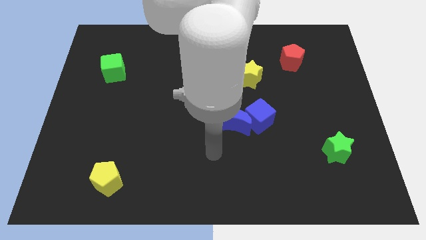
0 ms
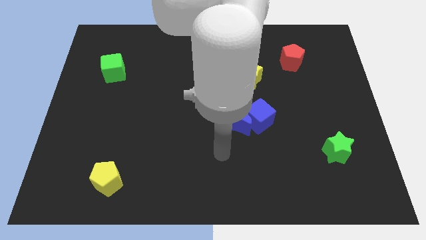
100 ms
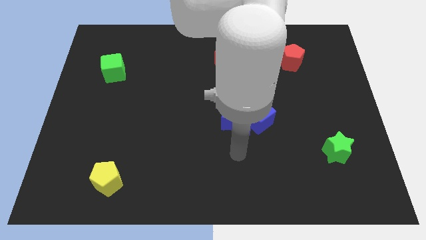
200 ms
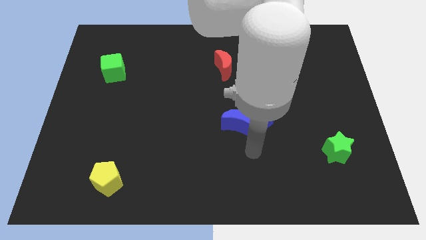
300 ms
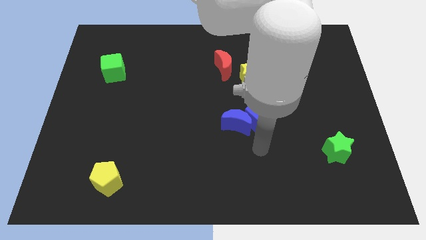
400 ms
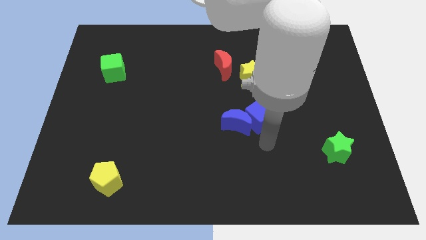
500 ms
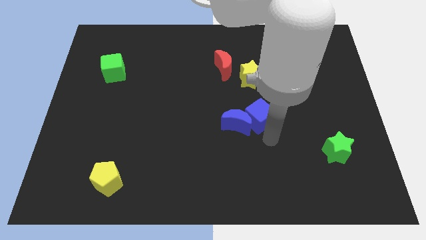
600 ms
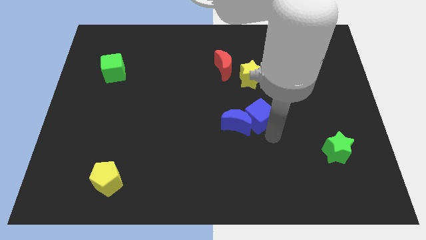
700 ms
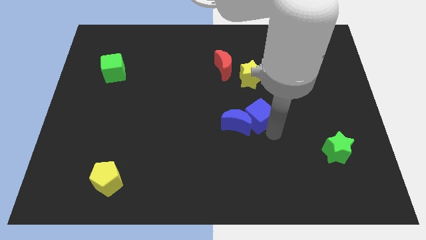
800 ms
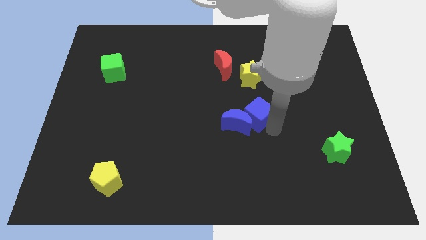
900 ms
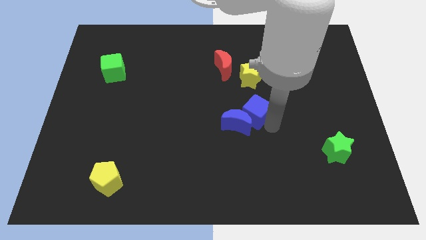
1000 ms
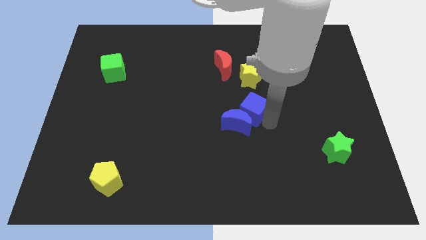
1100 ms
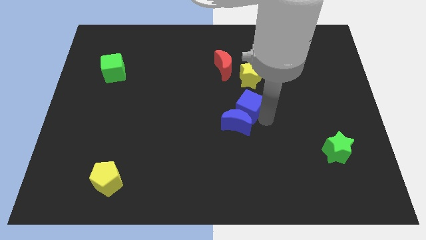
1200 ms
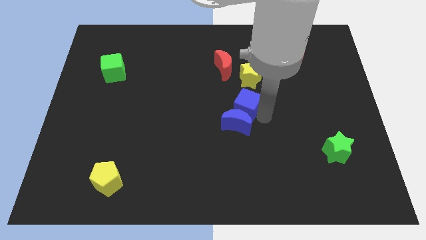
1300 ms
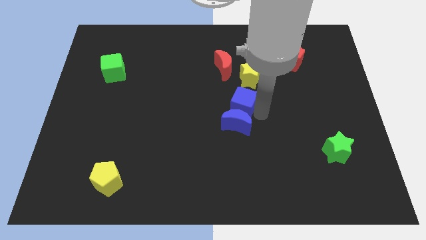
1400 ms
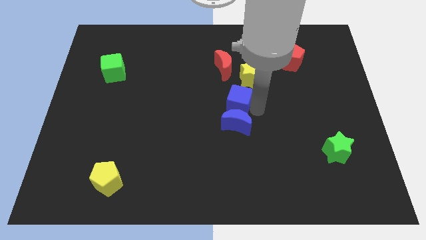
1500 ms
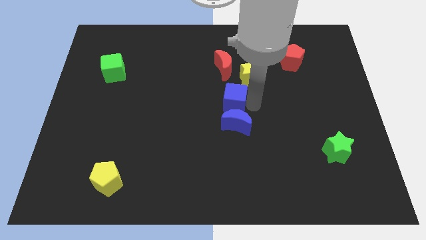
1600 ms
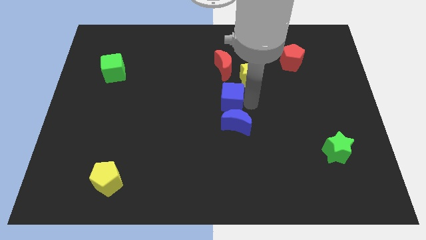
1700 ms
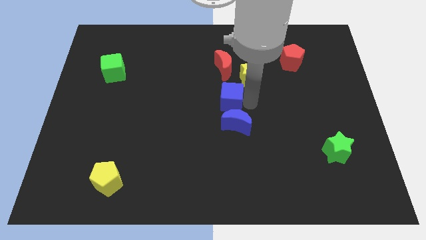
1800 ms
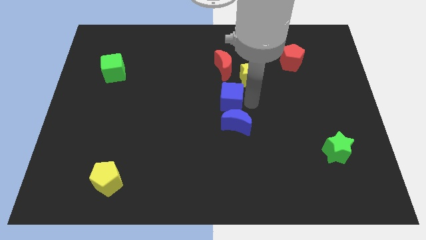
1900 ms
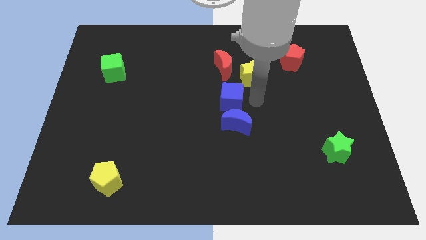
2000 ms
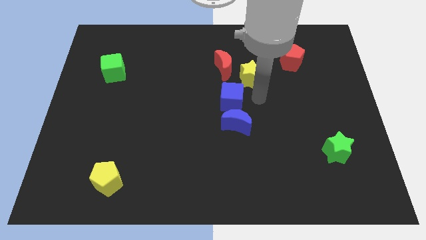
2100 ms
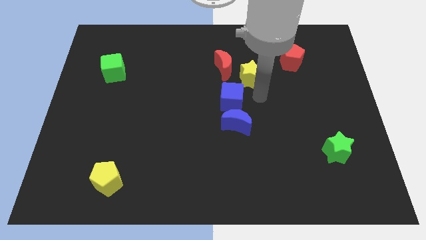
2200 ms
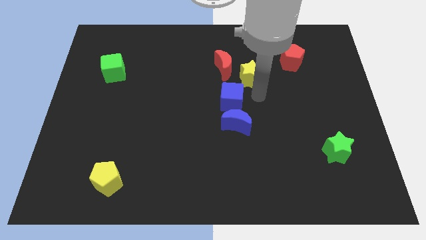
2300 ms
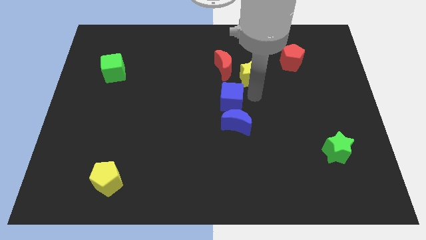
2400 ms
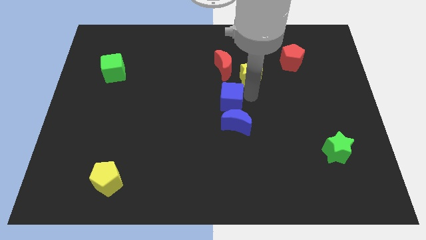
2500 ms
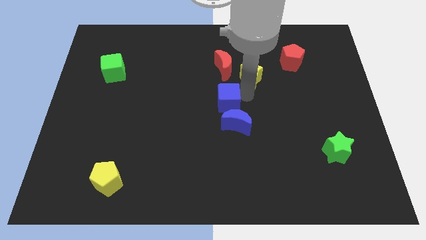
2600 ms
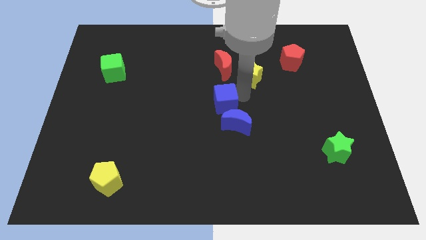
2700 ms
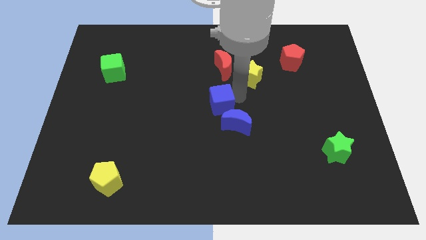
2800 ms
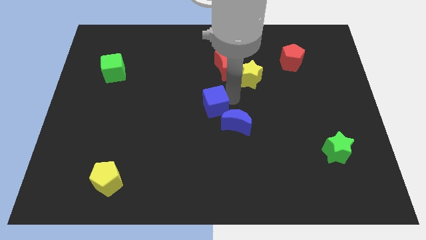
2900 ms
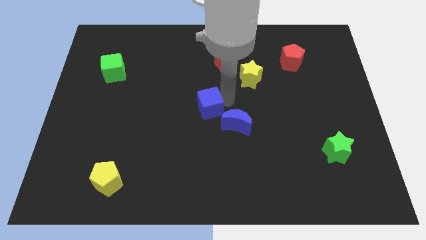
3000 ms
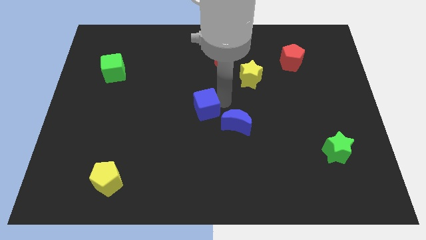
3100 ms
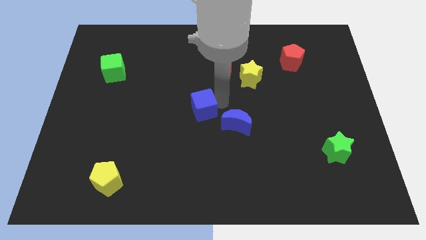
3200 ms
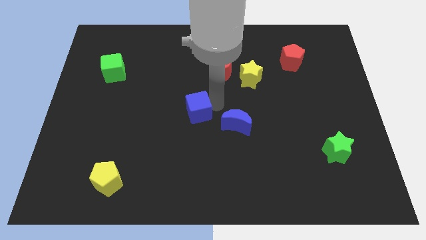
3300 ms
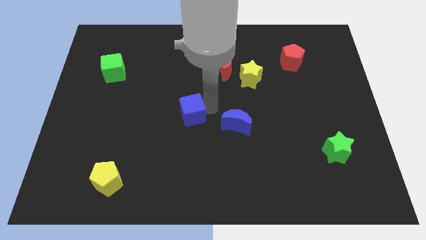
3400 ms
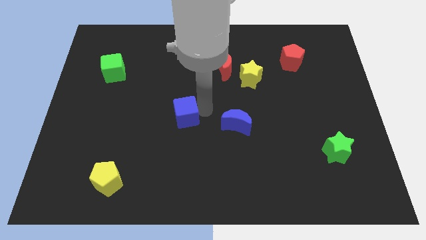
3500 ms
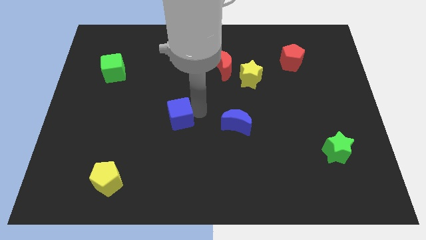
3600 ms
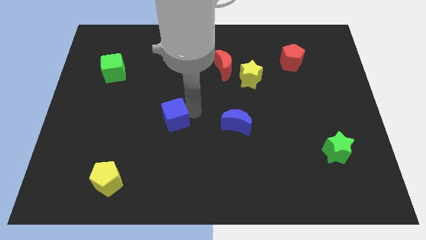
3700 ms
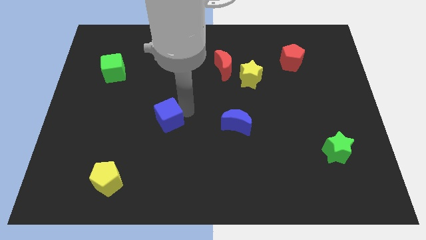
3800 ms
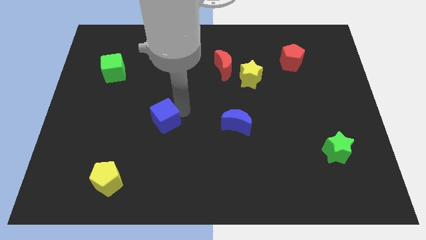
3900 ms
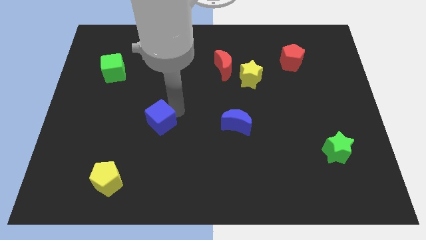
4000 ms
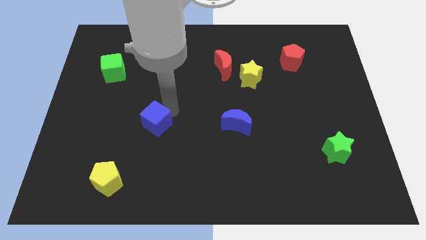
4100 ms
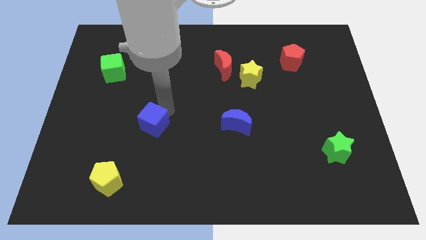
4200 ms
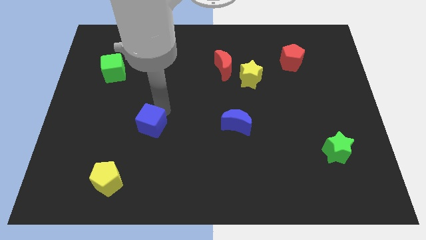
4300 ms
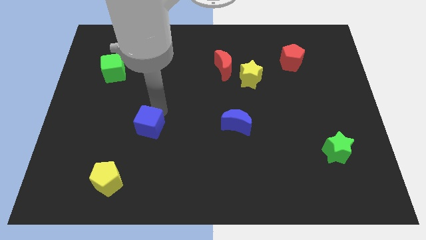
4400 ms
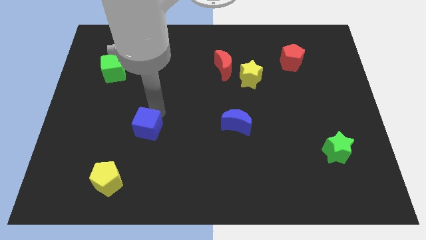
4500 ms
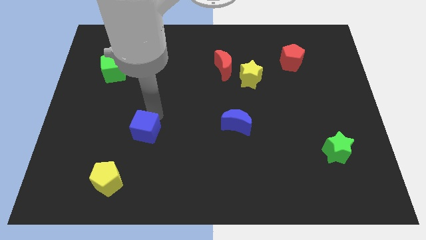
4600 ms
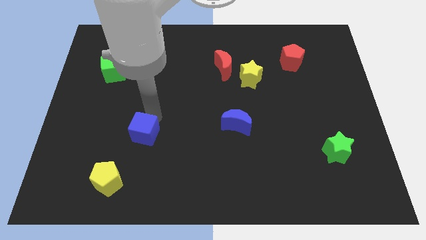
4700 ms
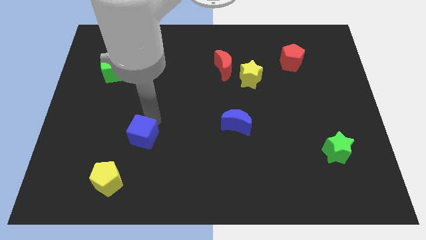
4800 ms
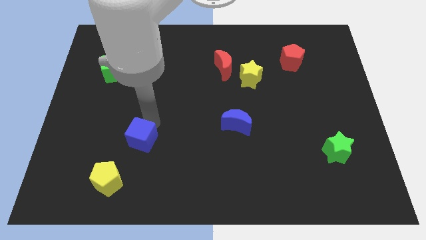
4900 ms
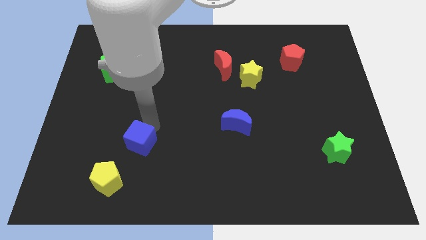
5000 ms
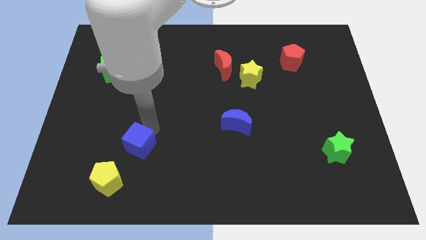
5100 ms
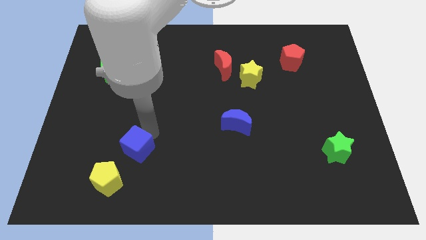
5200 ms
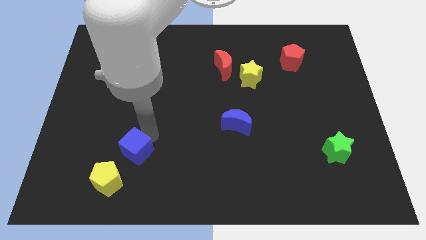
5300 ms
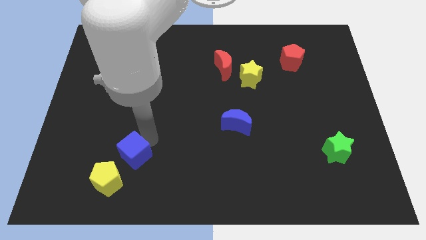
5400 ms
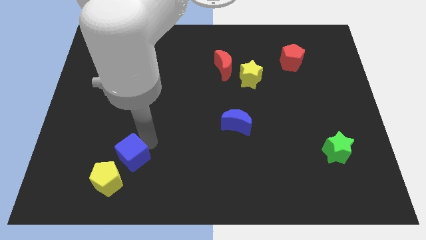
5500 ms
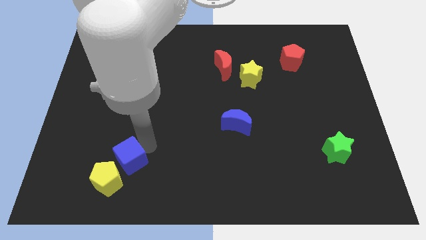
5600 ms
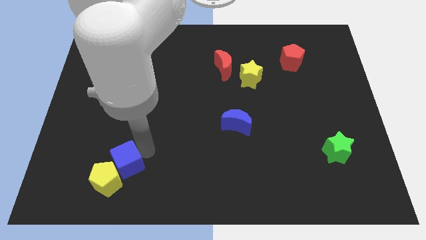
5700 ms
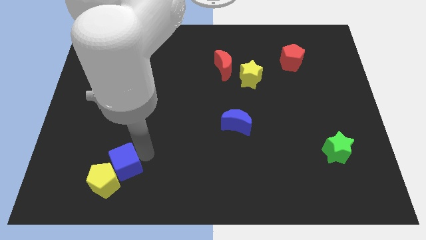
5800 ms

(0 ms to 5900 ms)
slide the blue cube to the yellow pentagon

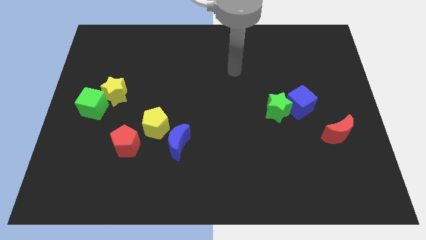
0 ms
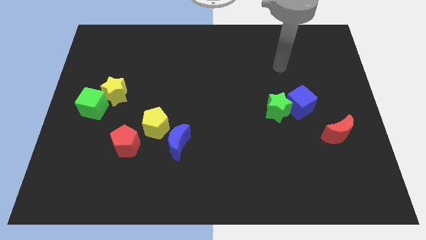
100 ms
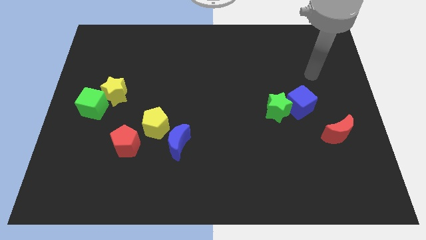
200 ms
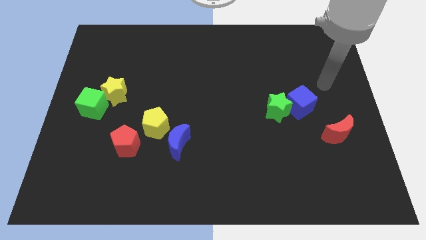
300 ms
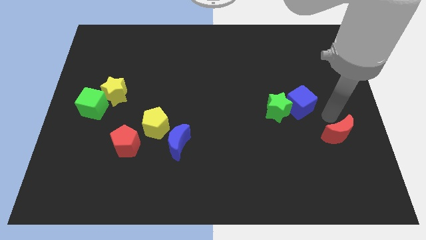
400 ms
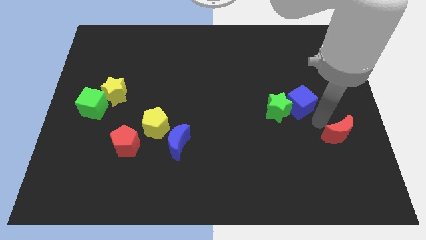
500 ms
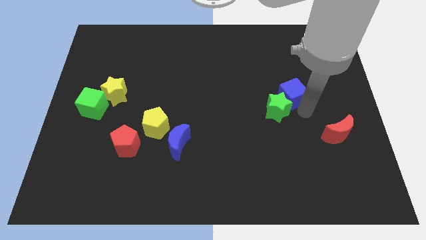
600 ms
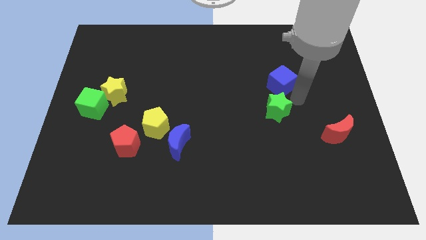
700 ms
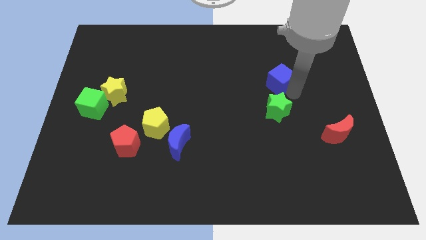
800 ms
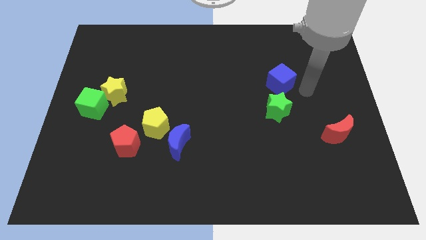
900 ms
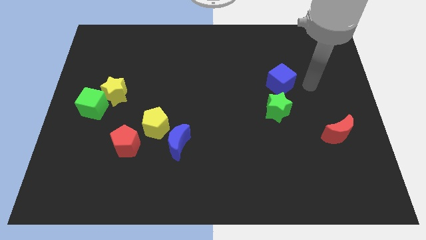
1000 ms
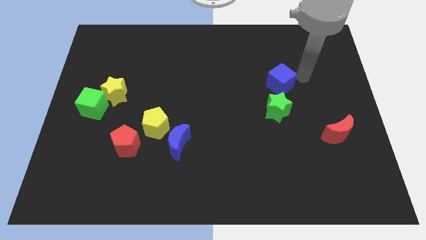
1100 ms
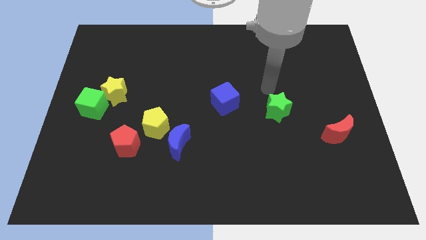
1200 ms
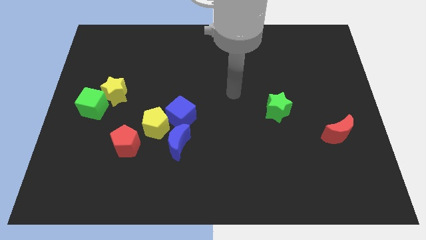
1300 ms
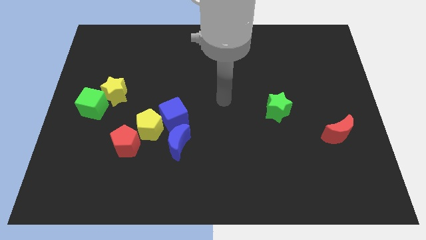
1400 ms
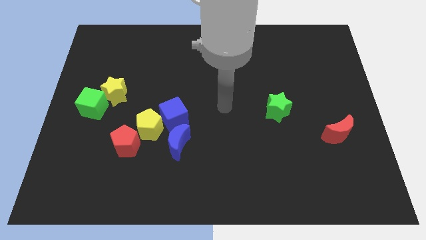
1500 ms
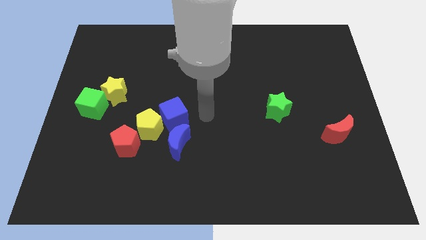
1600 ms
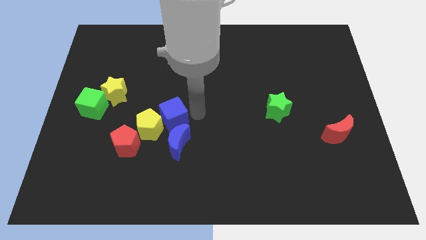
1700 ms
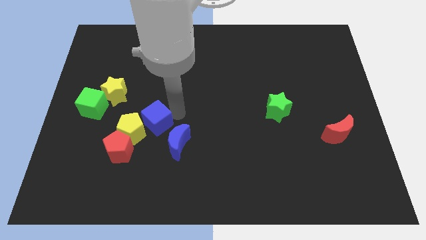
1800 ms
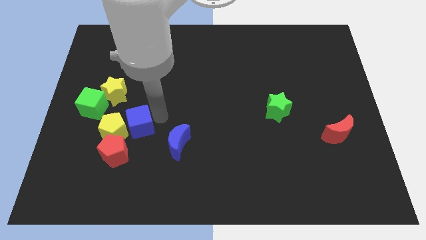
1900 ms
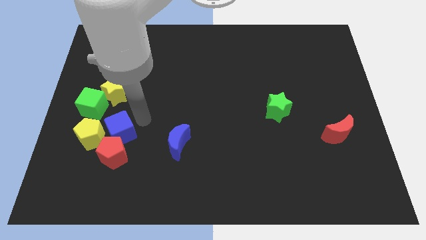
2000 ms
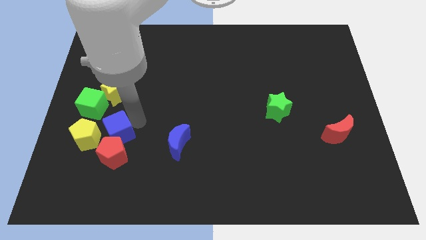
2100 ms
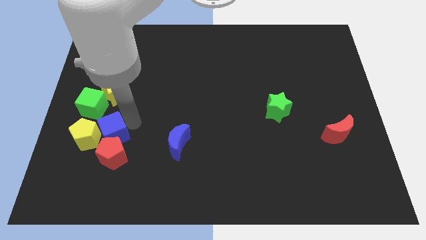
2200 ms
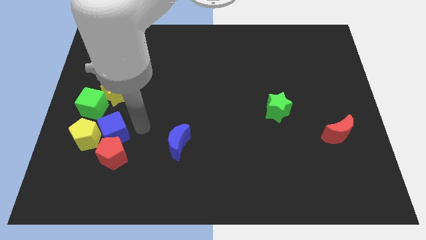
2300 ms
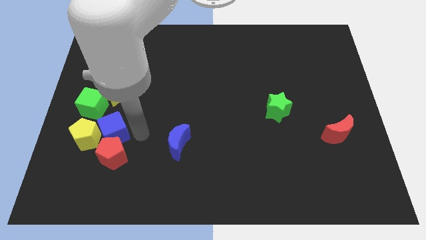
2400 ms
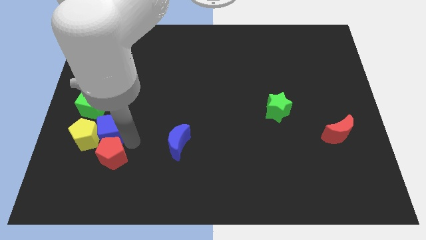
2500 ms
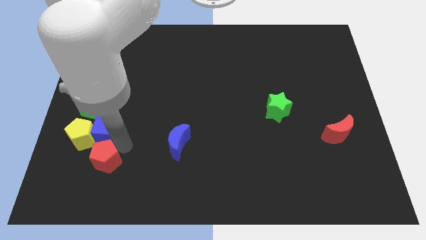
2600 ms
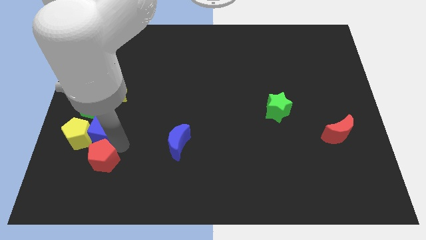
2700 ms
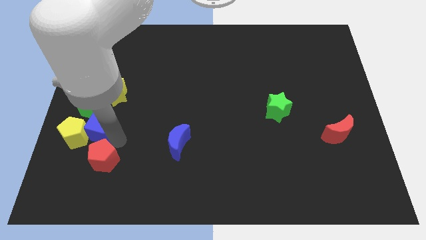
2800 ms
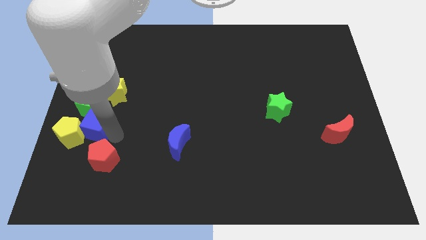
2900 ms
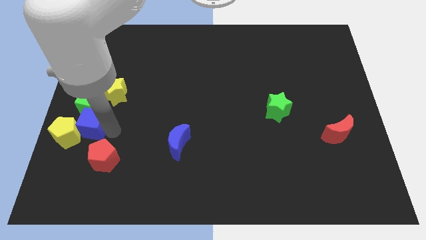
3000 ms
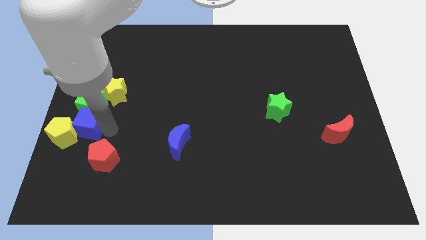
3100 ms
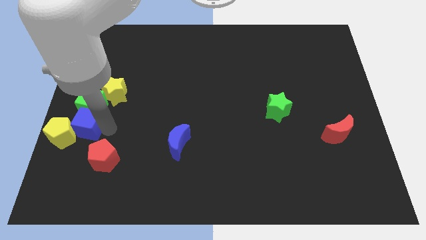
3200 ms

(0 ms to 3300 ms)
slide the blue cube to the green cube
